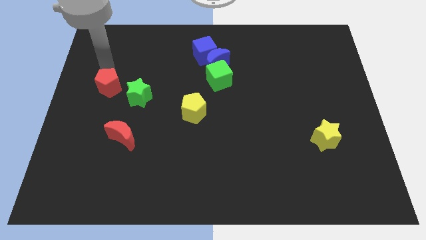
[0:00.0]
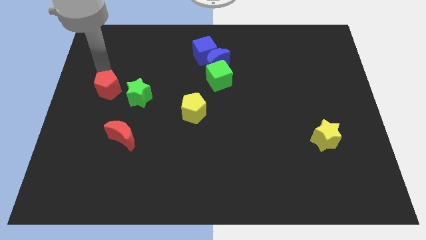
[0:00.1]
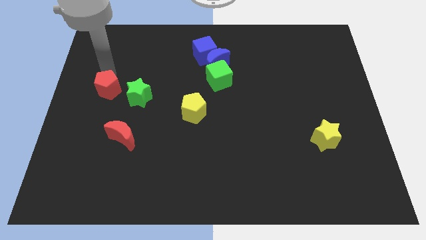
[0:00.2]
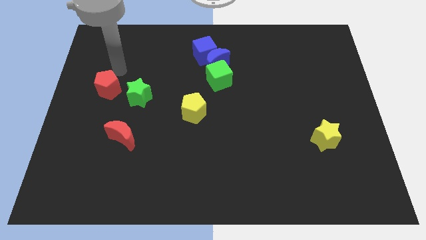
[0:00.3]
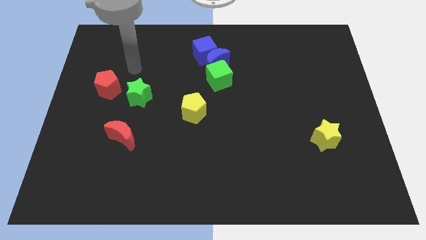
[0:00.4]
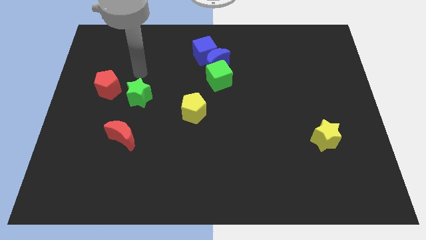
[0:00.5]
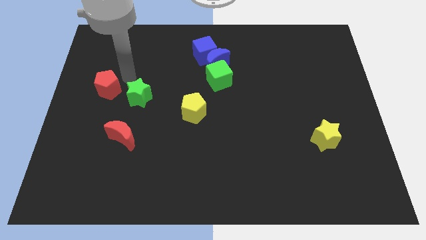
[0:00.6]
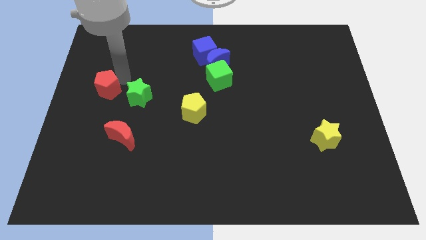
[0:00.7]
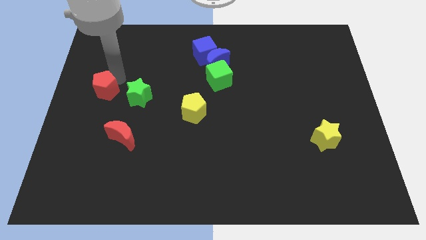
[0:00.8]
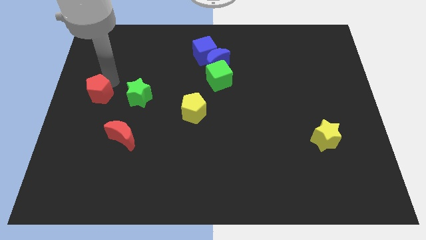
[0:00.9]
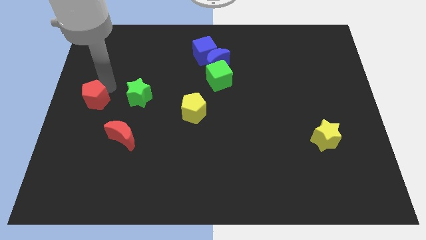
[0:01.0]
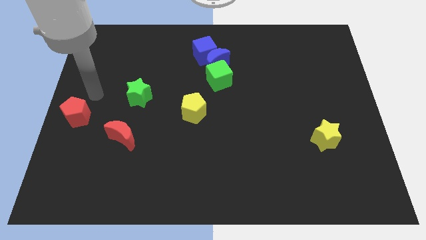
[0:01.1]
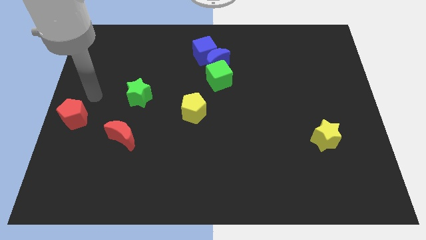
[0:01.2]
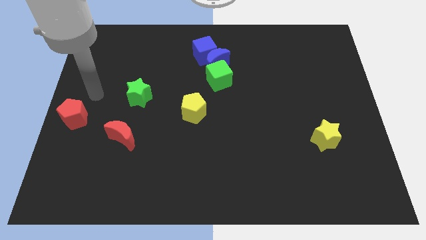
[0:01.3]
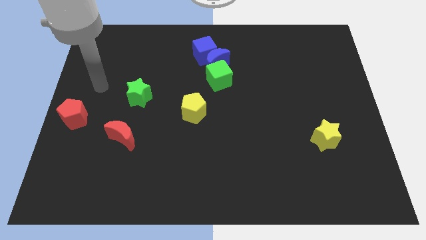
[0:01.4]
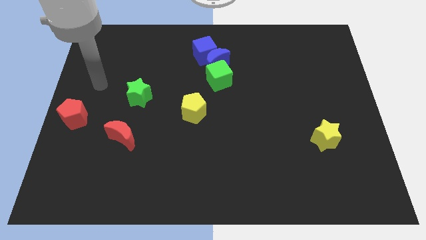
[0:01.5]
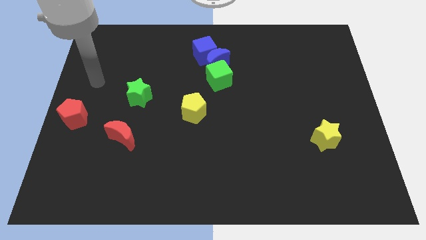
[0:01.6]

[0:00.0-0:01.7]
slide the red pentagon to the center left

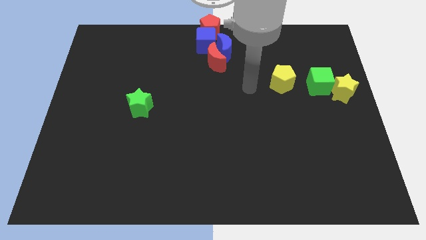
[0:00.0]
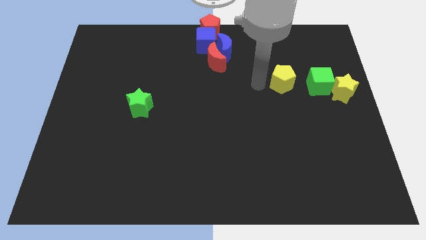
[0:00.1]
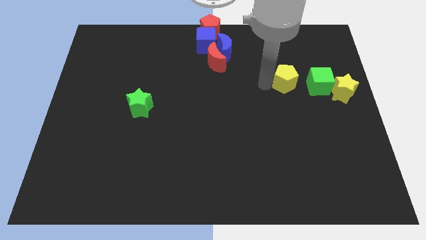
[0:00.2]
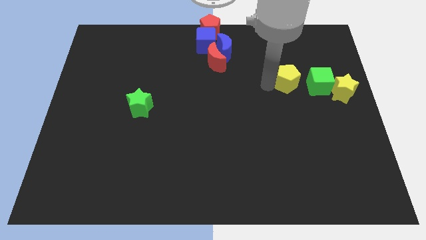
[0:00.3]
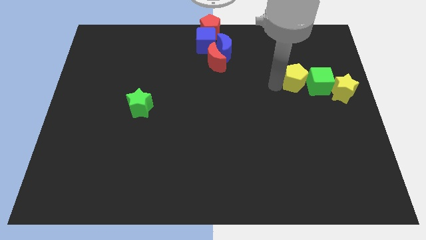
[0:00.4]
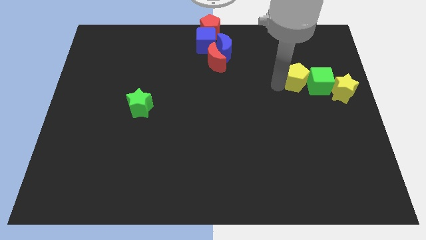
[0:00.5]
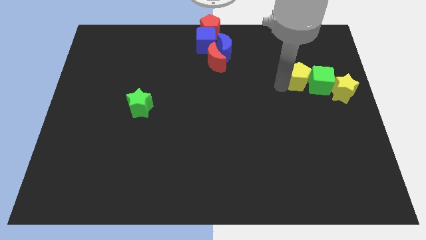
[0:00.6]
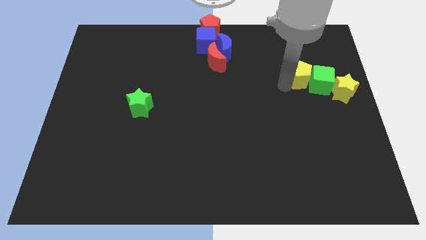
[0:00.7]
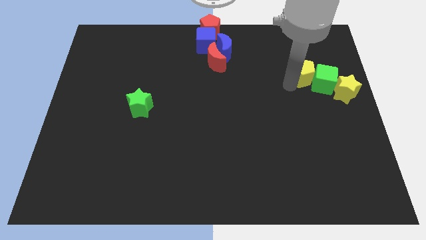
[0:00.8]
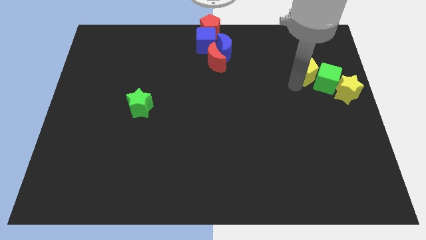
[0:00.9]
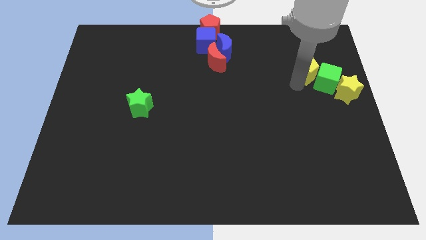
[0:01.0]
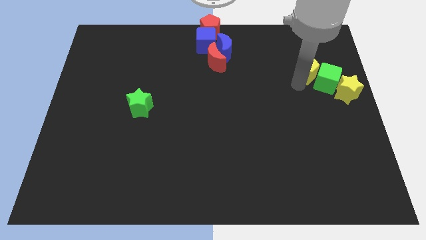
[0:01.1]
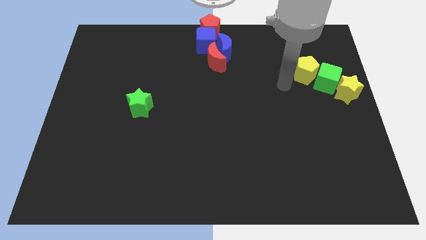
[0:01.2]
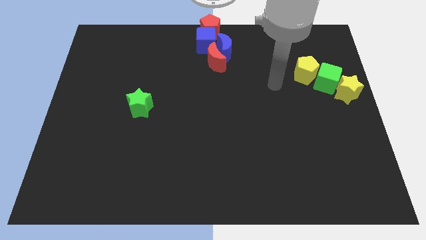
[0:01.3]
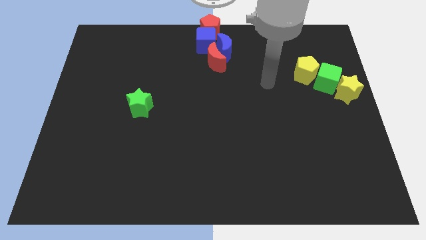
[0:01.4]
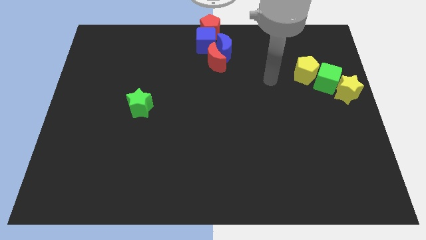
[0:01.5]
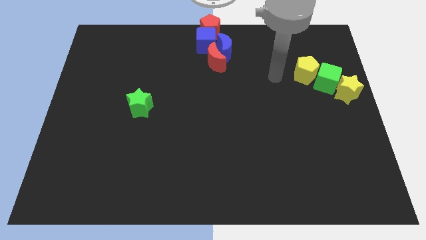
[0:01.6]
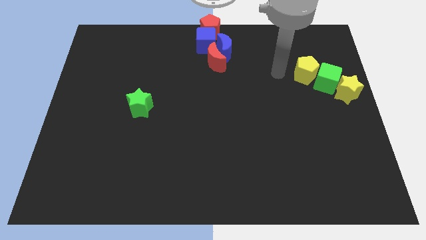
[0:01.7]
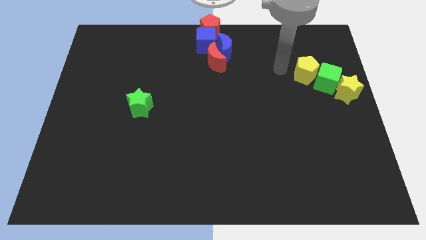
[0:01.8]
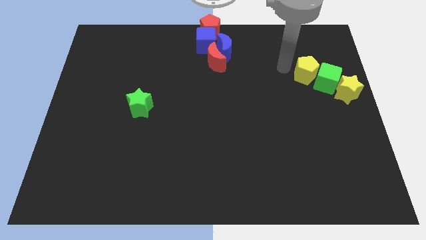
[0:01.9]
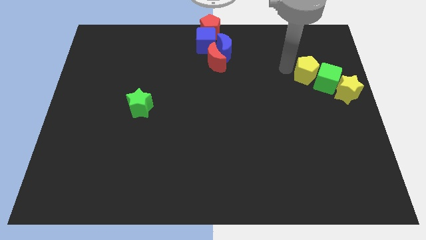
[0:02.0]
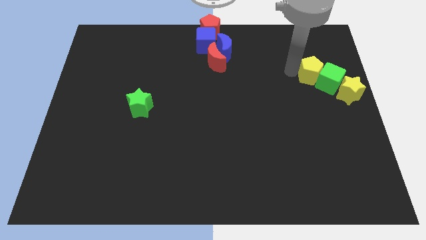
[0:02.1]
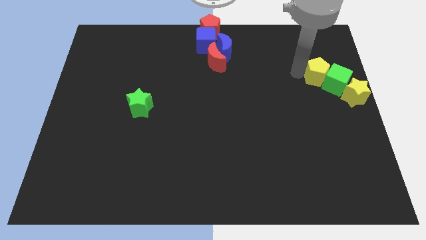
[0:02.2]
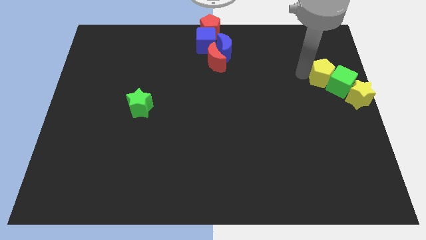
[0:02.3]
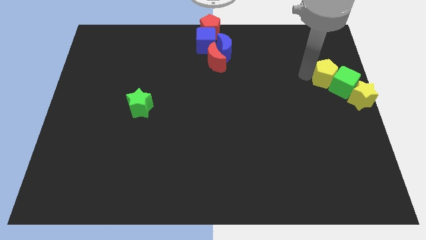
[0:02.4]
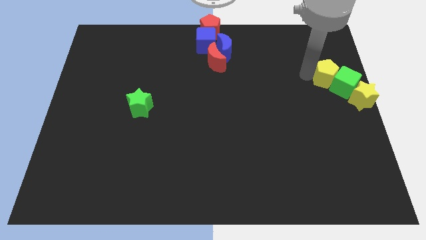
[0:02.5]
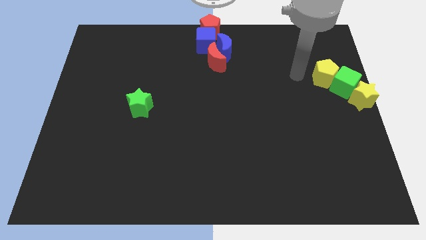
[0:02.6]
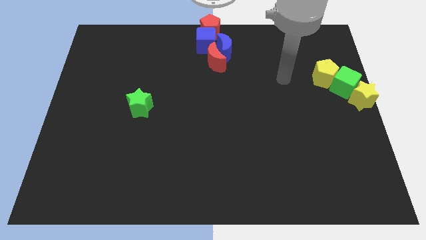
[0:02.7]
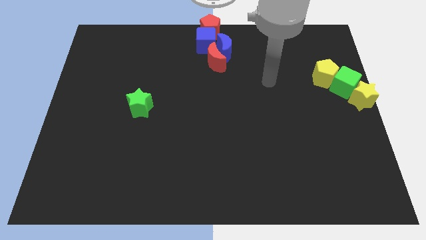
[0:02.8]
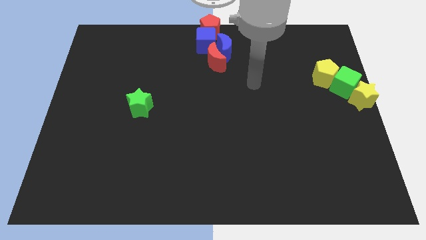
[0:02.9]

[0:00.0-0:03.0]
push the yellow pentagon into the green cube

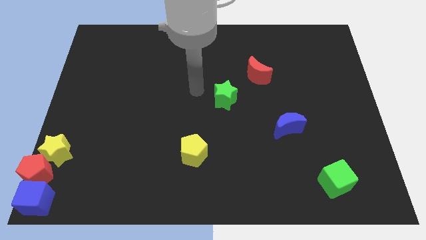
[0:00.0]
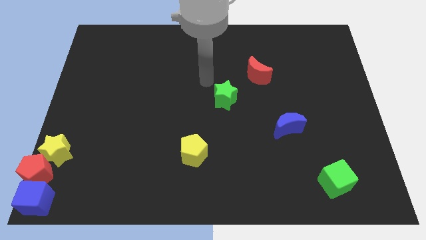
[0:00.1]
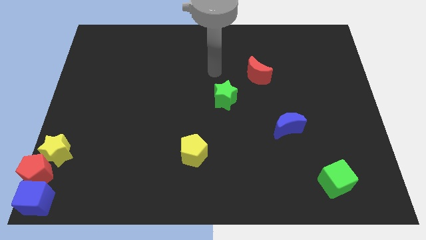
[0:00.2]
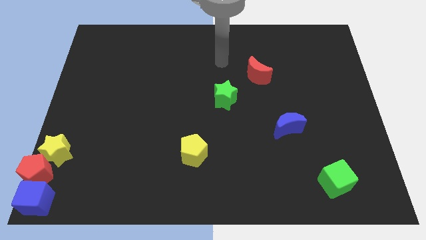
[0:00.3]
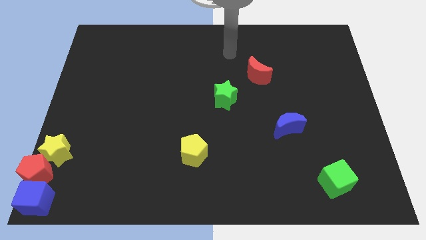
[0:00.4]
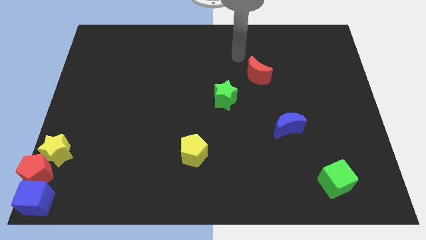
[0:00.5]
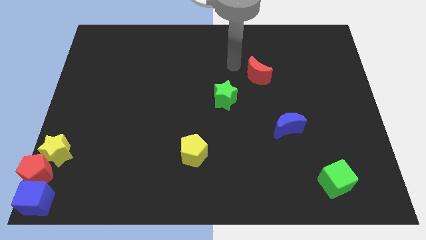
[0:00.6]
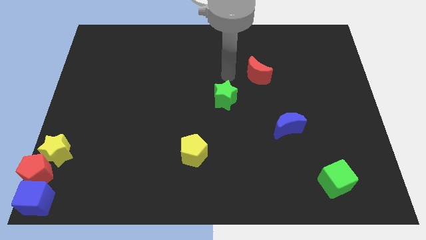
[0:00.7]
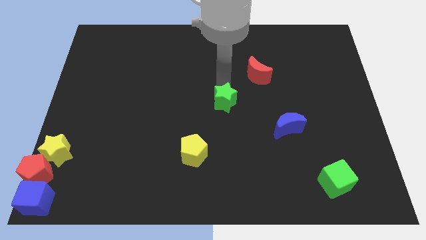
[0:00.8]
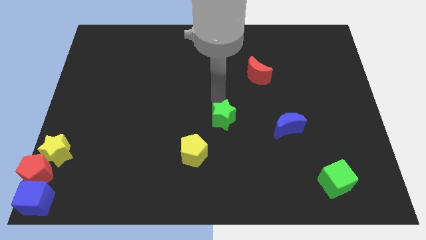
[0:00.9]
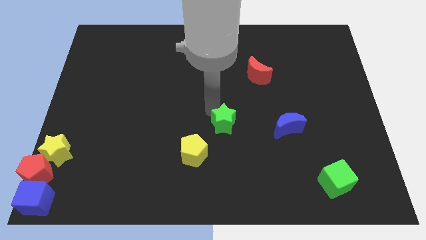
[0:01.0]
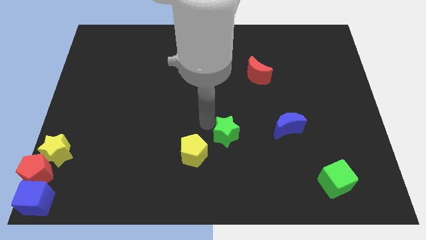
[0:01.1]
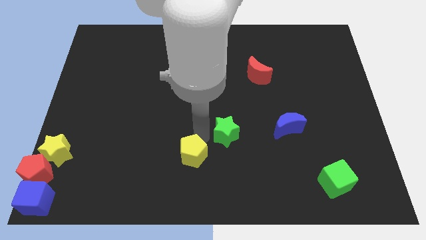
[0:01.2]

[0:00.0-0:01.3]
bring the green star at the top right side of the yellow pentagon

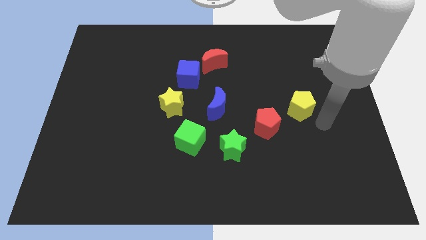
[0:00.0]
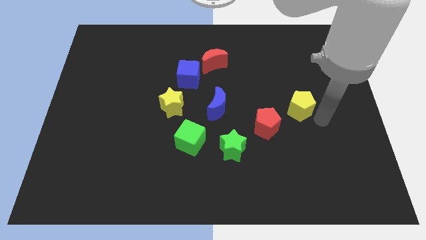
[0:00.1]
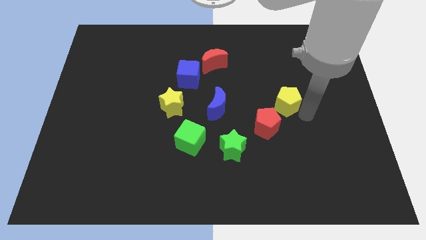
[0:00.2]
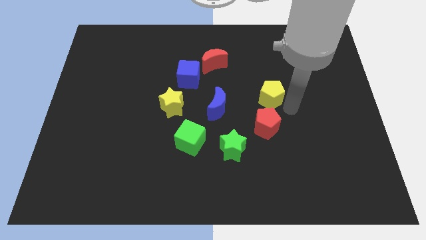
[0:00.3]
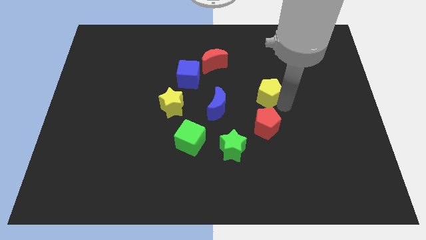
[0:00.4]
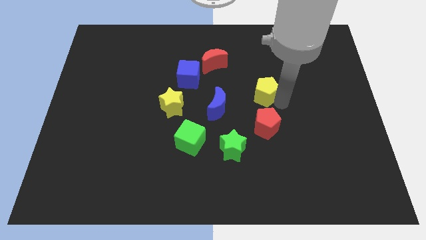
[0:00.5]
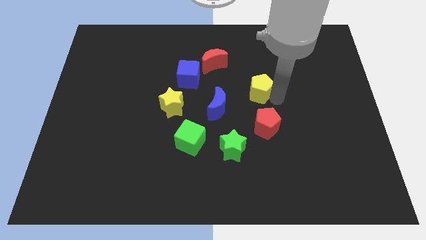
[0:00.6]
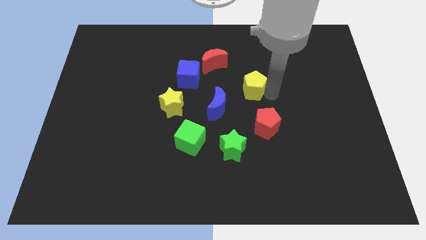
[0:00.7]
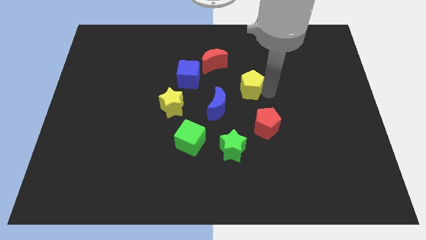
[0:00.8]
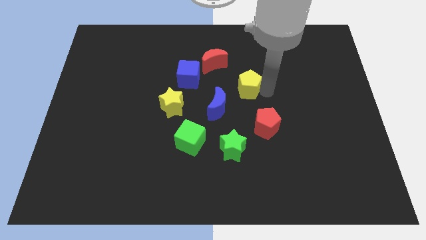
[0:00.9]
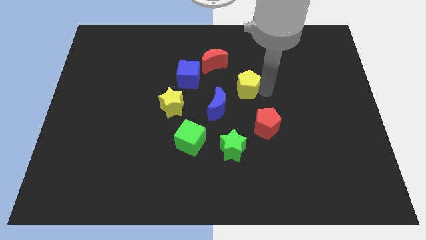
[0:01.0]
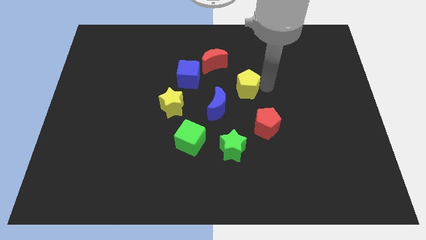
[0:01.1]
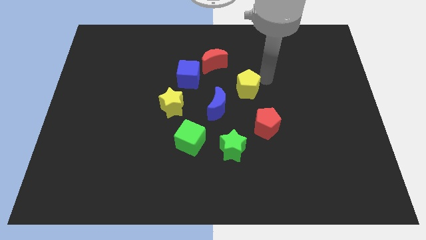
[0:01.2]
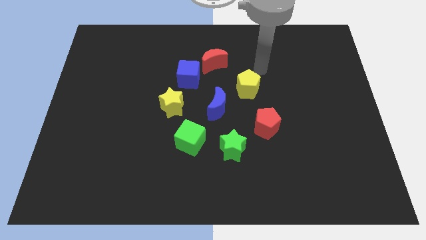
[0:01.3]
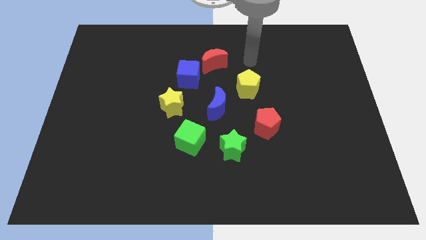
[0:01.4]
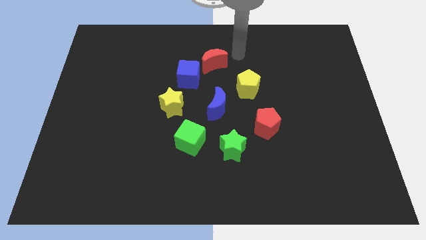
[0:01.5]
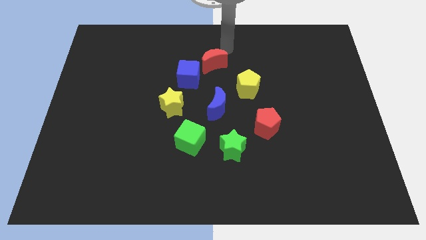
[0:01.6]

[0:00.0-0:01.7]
push the yellow pentagon close to the blue crescent

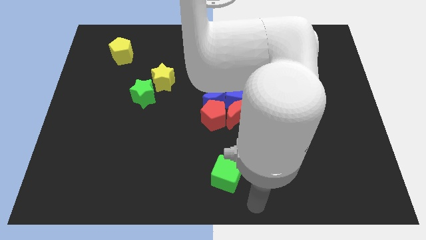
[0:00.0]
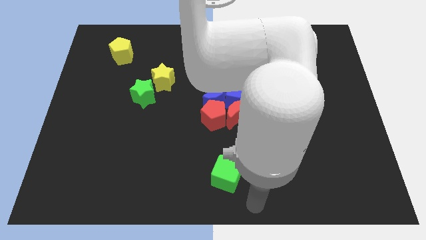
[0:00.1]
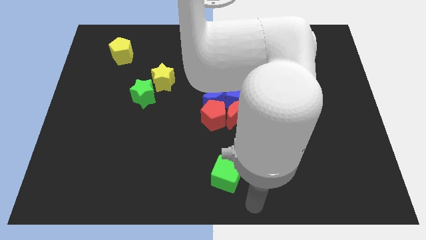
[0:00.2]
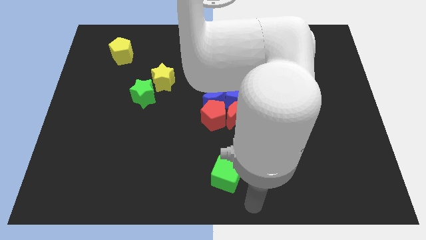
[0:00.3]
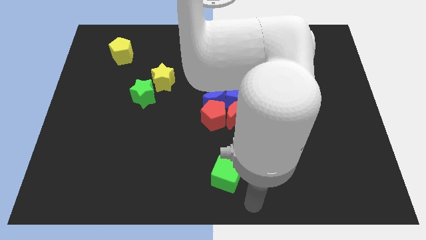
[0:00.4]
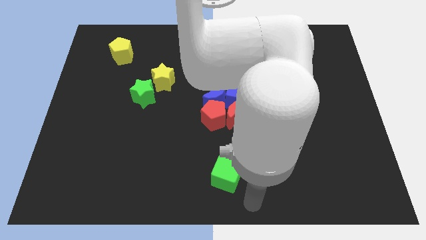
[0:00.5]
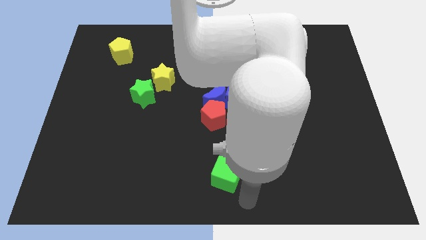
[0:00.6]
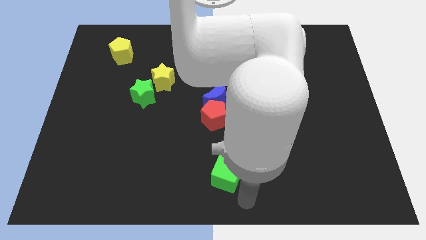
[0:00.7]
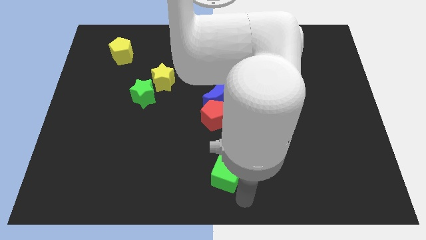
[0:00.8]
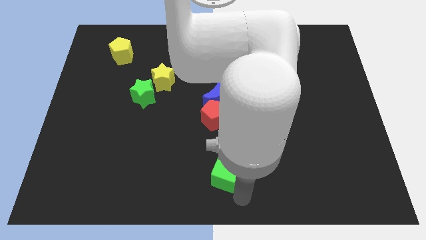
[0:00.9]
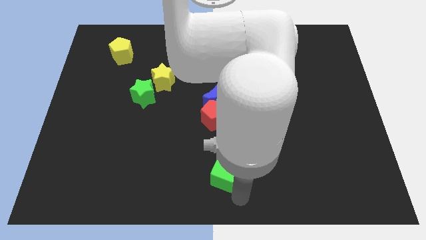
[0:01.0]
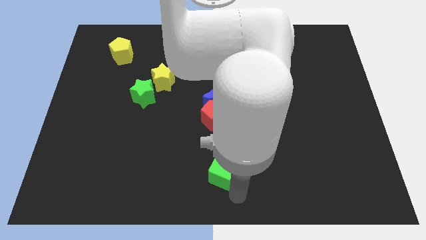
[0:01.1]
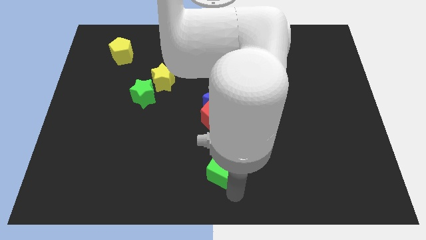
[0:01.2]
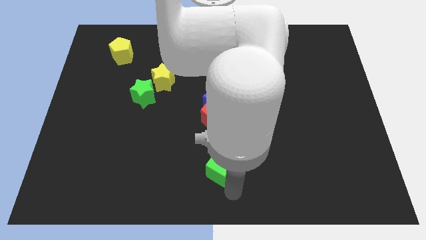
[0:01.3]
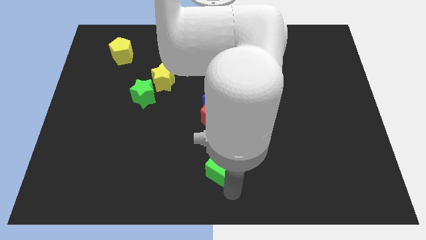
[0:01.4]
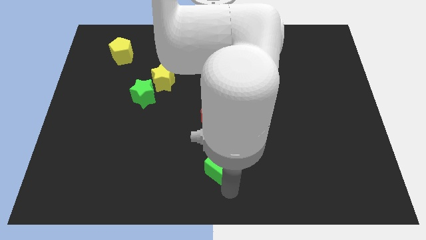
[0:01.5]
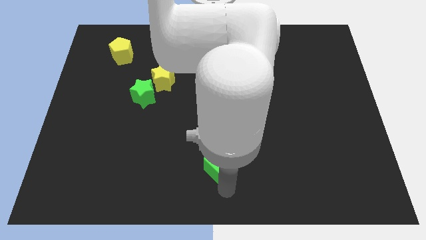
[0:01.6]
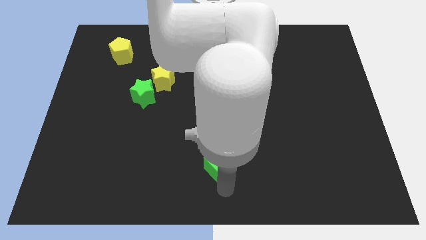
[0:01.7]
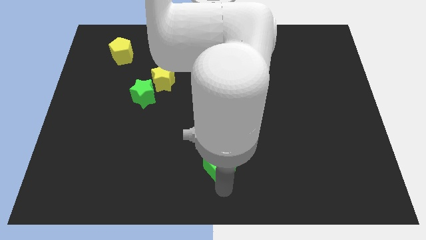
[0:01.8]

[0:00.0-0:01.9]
place the green cube diagonally on the bottom right side of the green star
